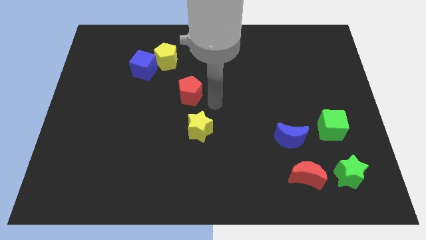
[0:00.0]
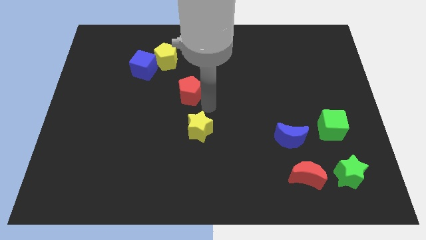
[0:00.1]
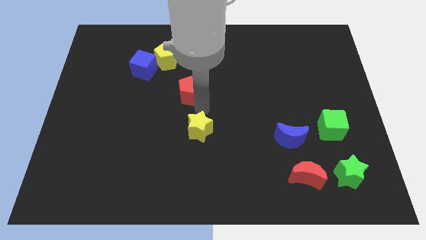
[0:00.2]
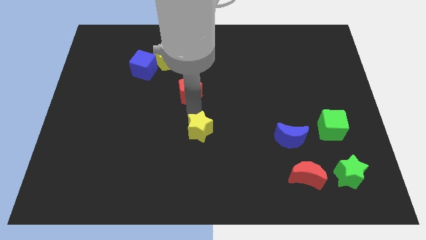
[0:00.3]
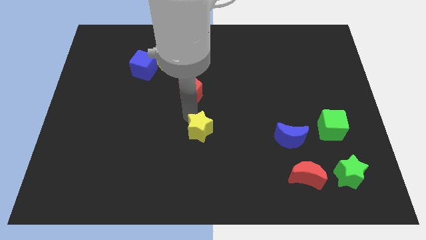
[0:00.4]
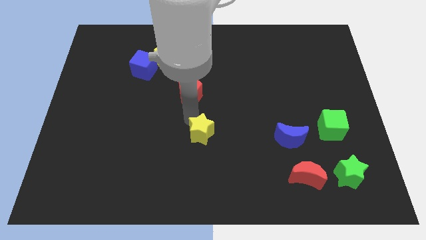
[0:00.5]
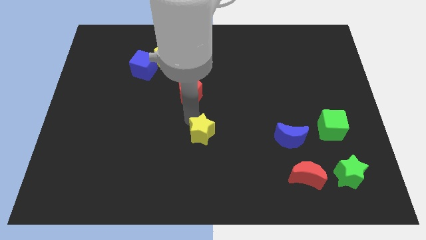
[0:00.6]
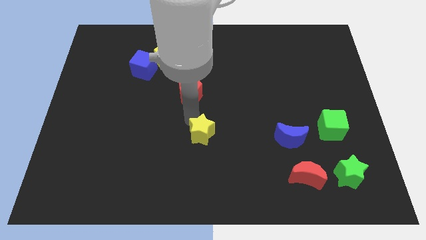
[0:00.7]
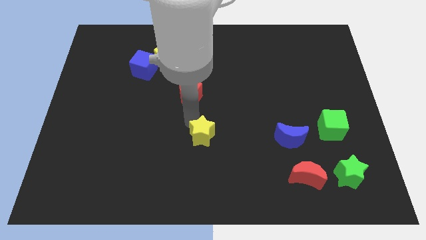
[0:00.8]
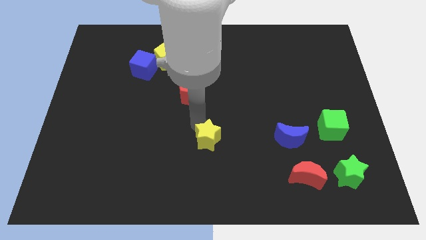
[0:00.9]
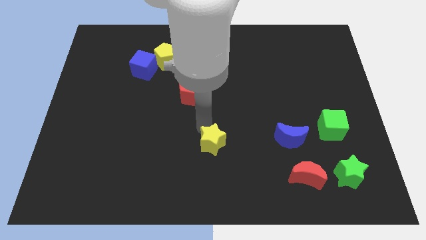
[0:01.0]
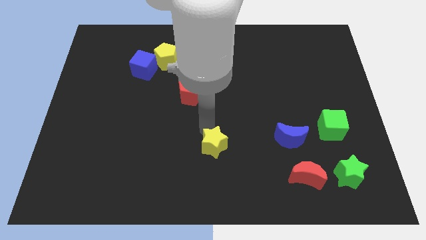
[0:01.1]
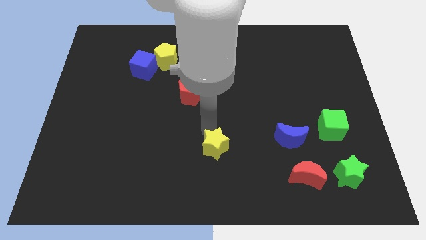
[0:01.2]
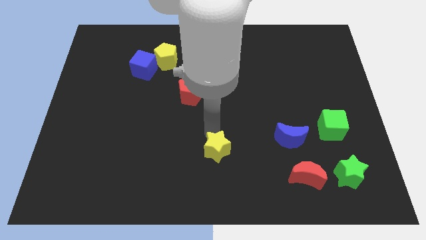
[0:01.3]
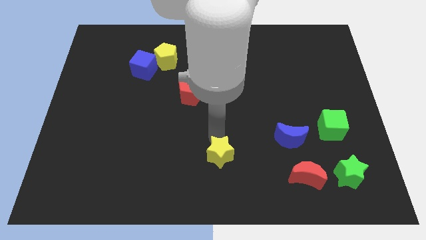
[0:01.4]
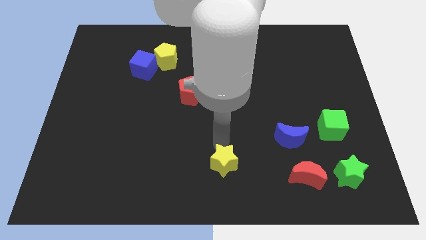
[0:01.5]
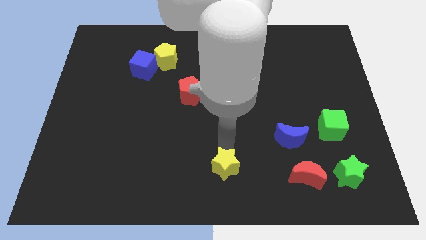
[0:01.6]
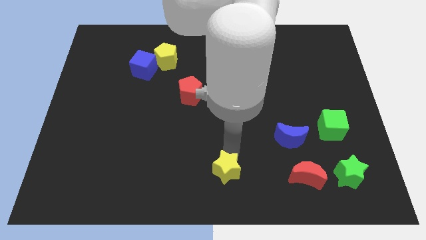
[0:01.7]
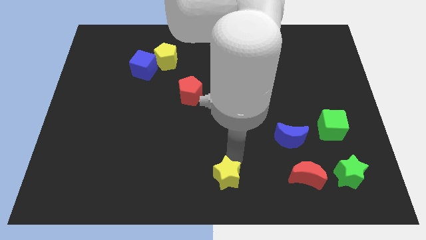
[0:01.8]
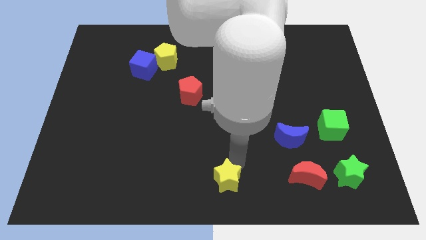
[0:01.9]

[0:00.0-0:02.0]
push the yellow star towards the bottom center of the board

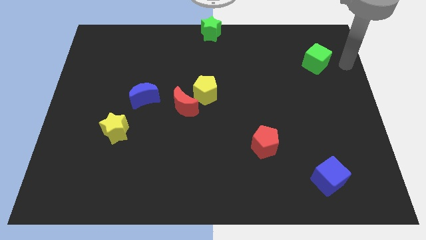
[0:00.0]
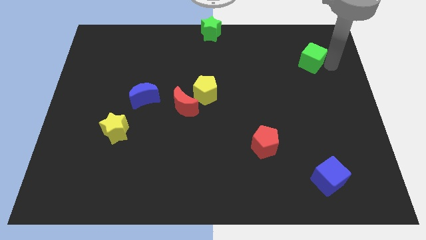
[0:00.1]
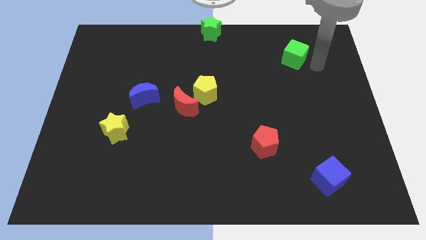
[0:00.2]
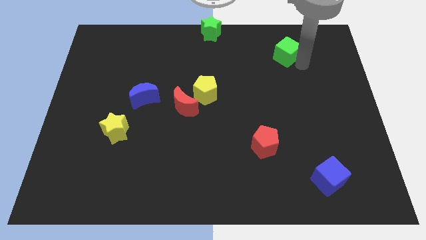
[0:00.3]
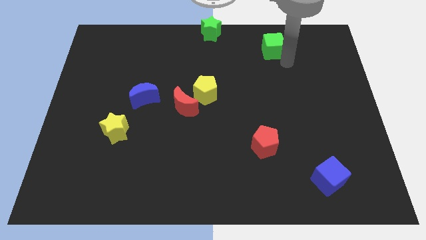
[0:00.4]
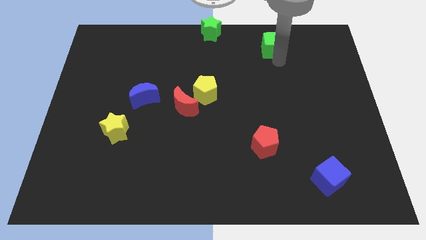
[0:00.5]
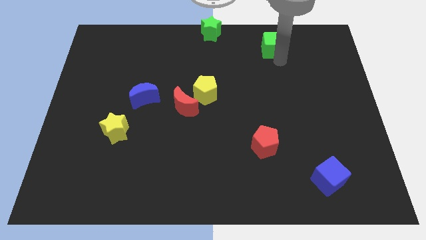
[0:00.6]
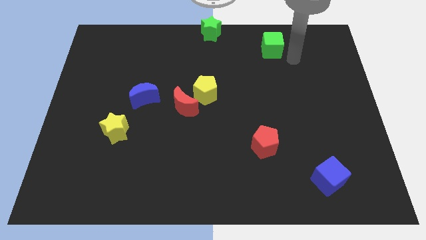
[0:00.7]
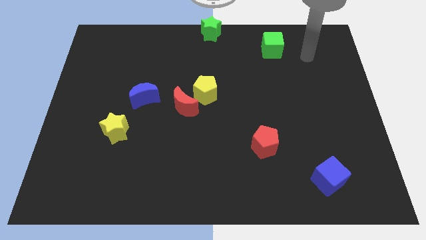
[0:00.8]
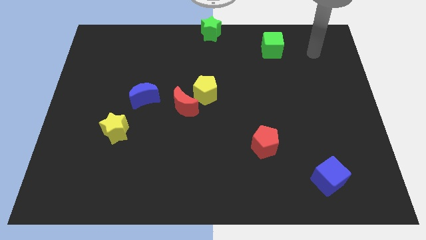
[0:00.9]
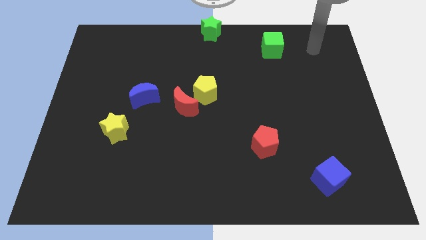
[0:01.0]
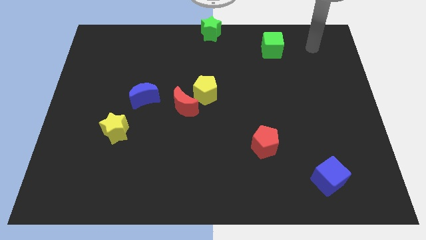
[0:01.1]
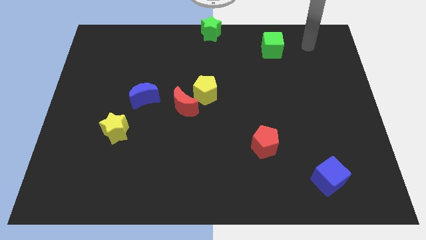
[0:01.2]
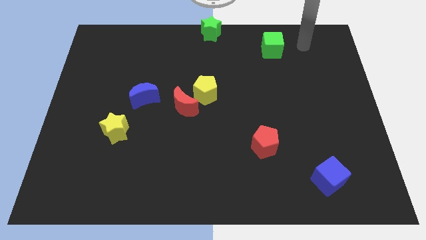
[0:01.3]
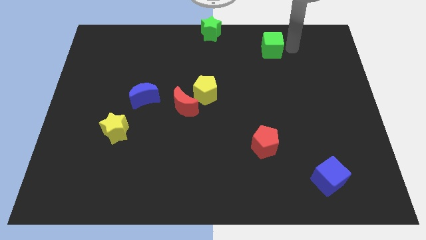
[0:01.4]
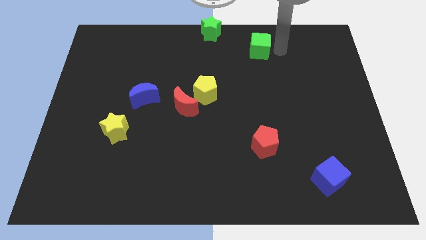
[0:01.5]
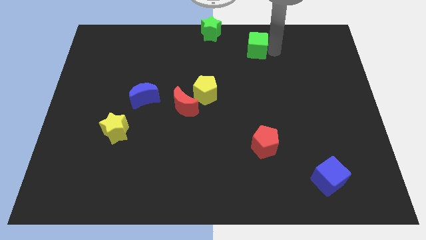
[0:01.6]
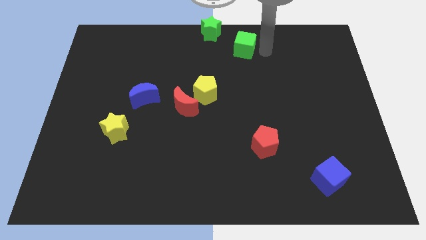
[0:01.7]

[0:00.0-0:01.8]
push the green cube towards the left side

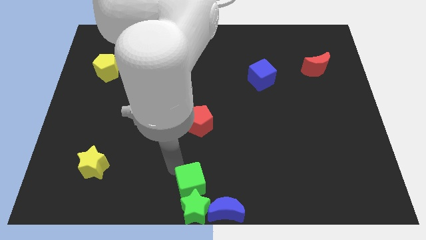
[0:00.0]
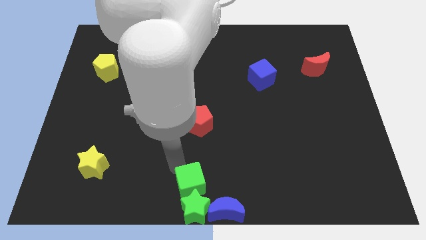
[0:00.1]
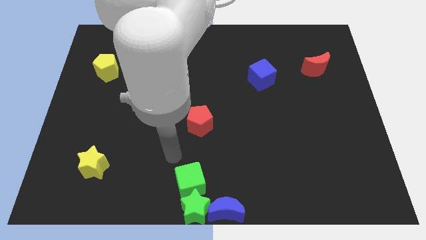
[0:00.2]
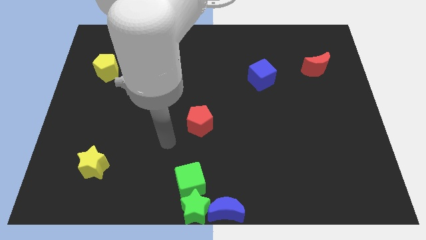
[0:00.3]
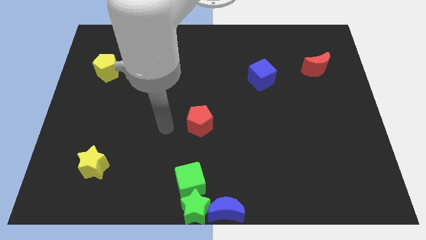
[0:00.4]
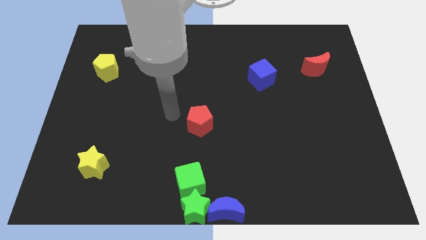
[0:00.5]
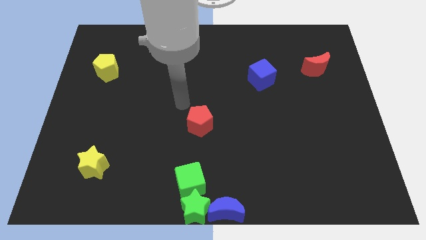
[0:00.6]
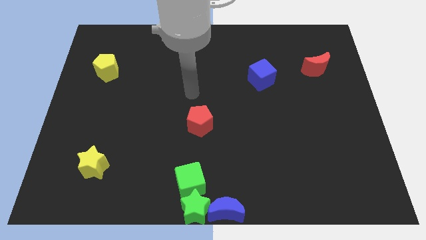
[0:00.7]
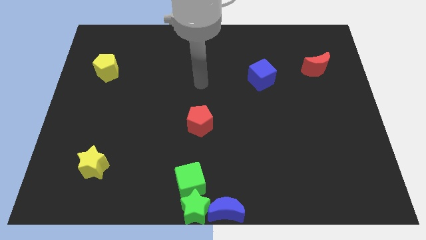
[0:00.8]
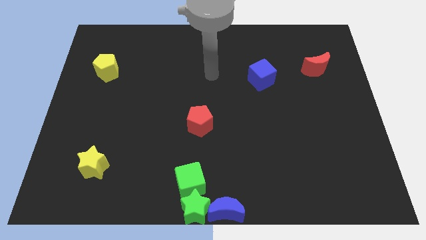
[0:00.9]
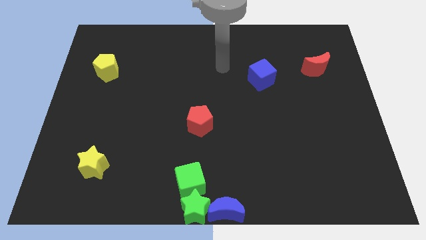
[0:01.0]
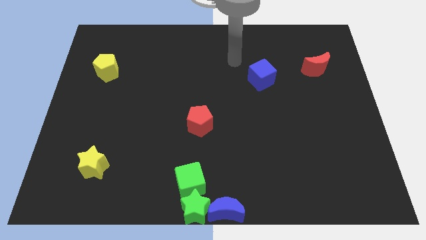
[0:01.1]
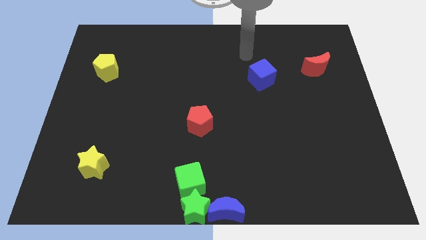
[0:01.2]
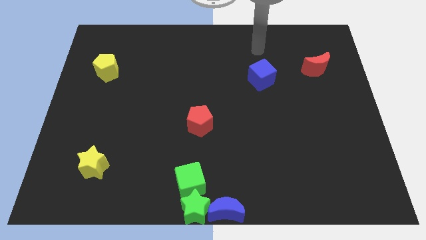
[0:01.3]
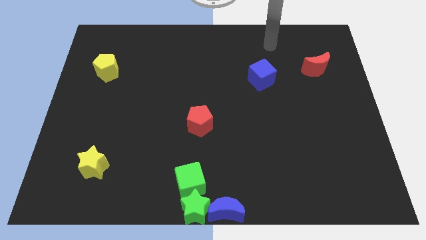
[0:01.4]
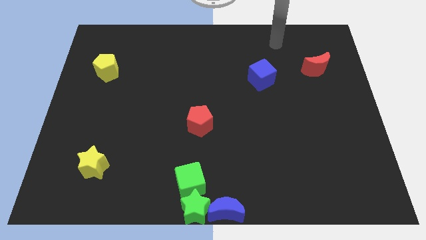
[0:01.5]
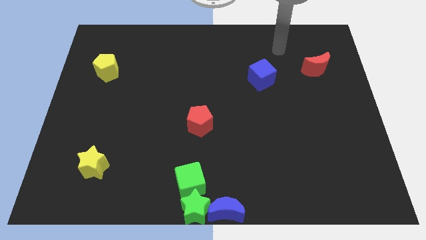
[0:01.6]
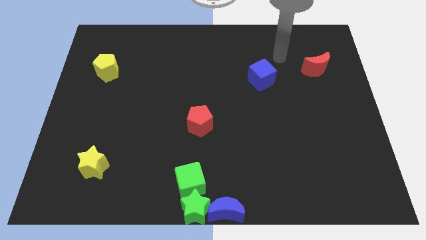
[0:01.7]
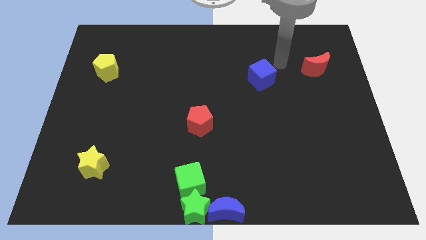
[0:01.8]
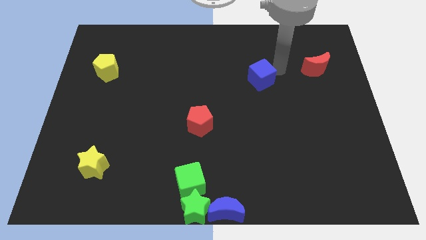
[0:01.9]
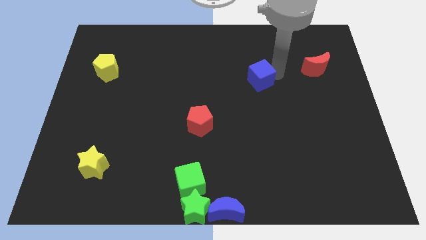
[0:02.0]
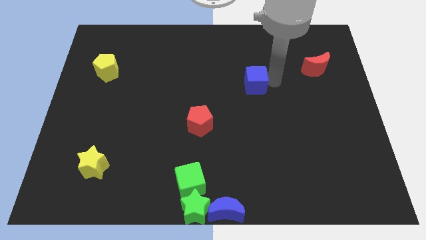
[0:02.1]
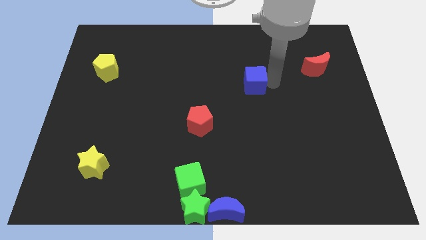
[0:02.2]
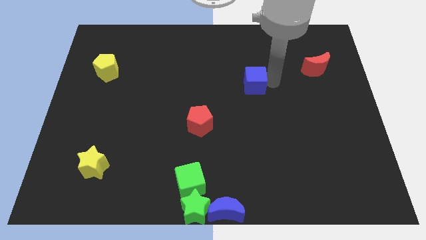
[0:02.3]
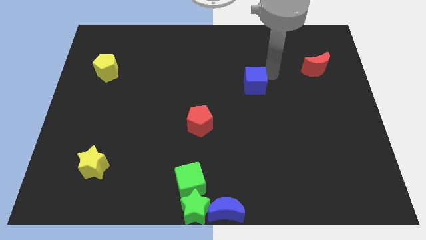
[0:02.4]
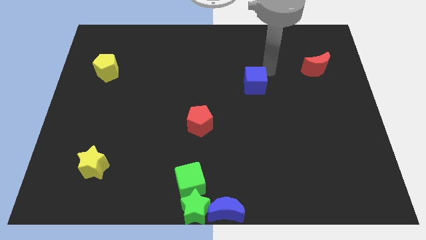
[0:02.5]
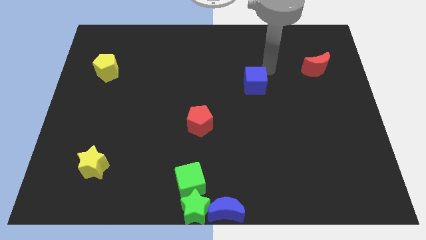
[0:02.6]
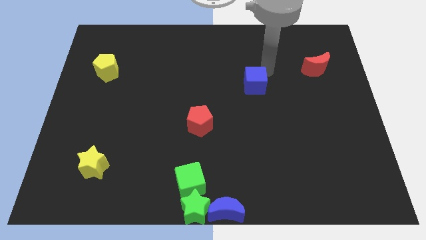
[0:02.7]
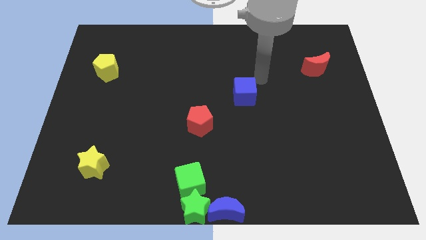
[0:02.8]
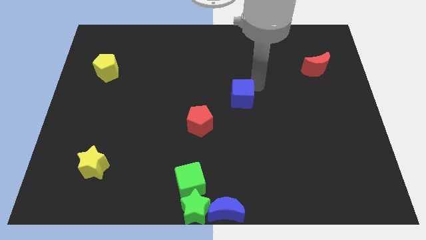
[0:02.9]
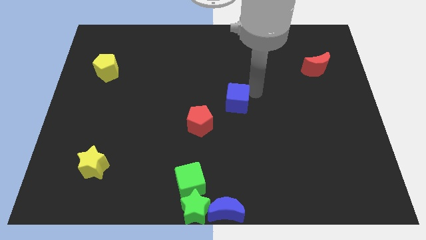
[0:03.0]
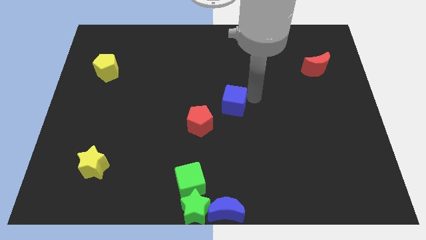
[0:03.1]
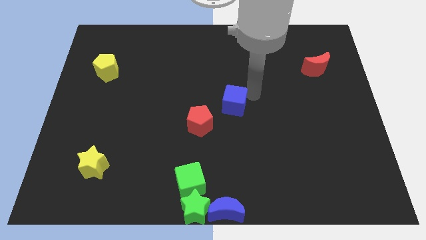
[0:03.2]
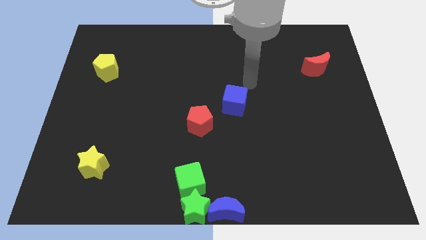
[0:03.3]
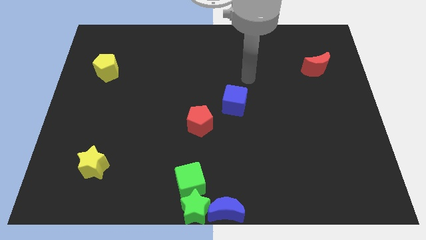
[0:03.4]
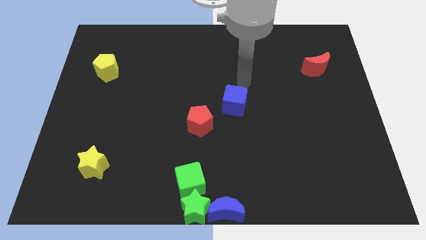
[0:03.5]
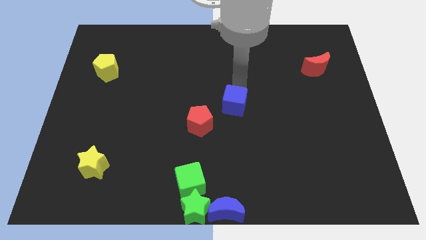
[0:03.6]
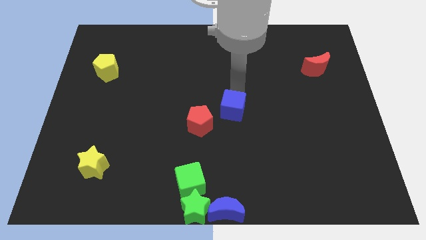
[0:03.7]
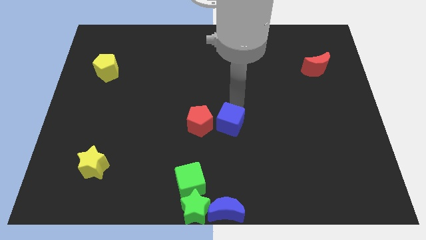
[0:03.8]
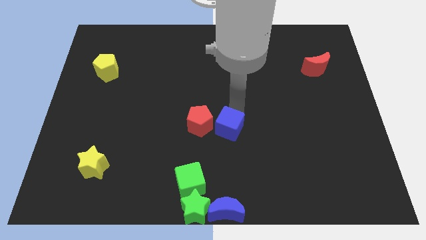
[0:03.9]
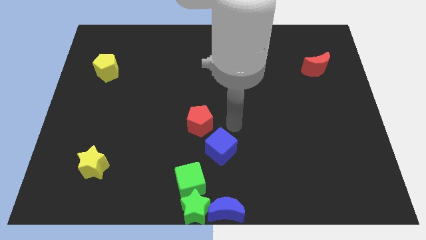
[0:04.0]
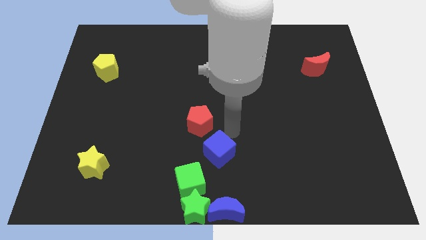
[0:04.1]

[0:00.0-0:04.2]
push the blue cube towards the bottom center of the board

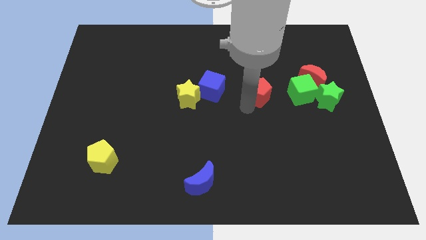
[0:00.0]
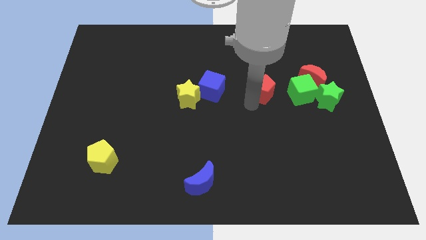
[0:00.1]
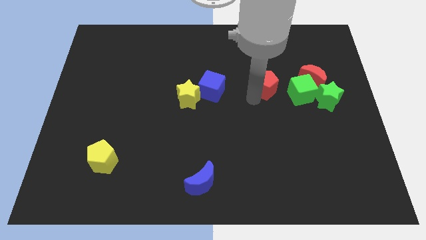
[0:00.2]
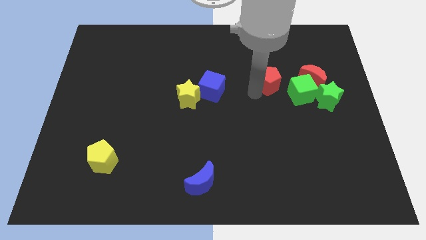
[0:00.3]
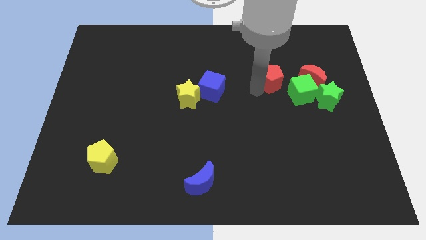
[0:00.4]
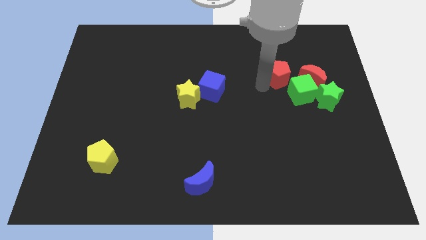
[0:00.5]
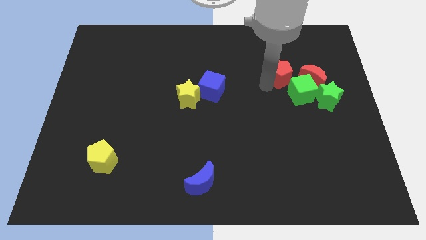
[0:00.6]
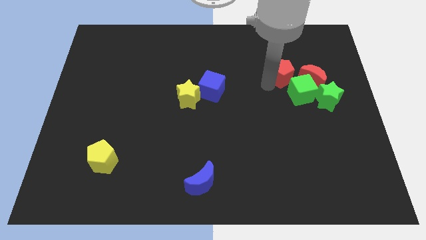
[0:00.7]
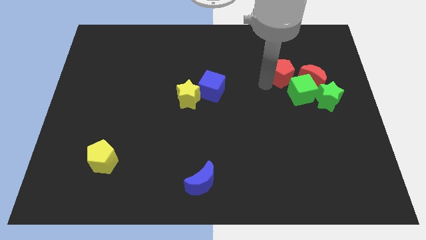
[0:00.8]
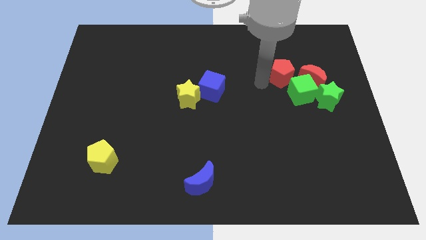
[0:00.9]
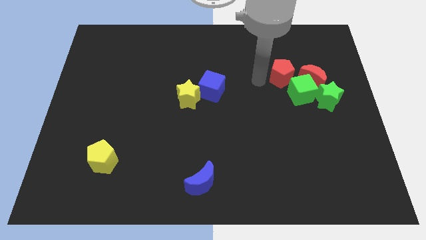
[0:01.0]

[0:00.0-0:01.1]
move the red pentagon to the left side of red crescent
